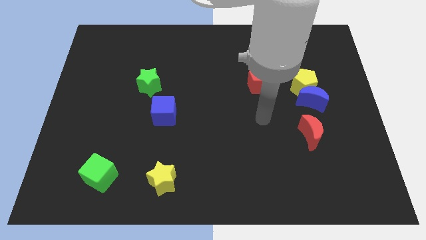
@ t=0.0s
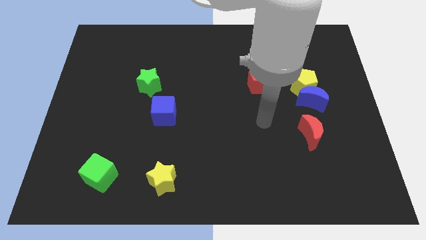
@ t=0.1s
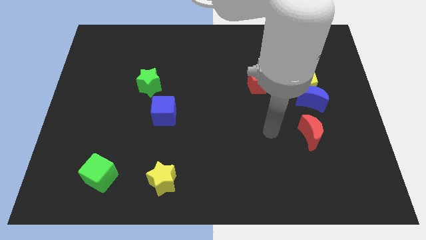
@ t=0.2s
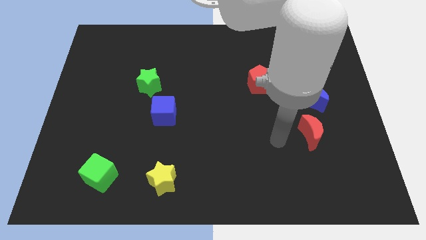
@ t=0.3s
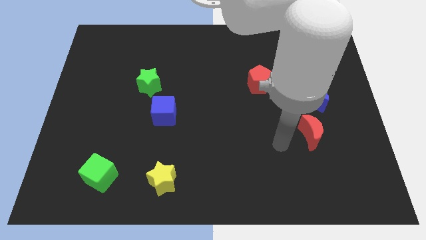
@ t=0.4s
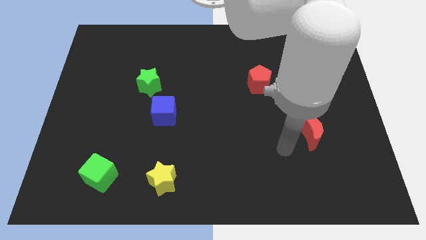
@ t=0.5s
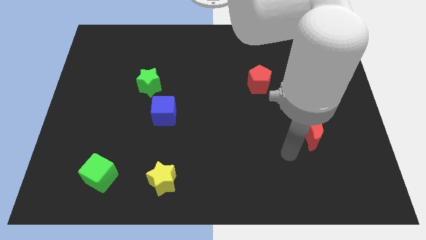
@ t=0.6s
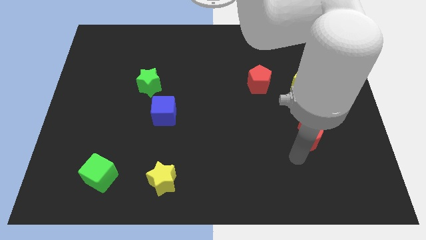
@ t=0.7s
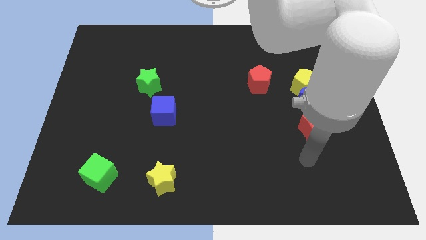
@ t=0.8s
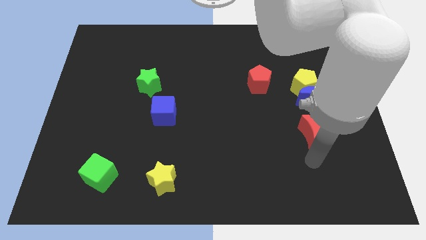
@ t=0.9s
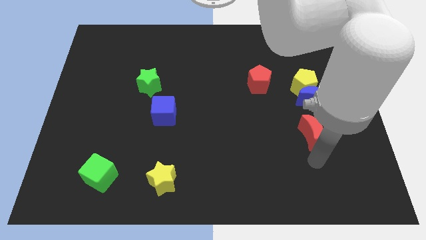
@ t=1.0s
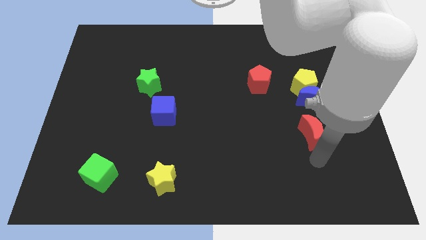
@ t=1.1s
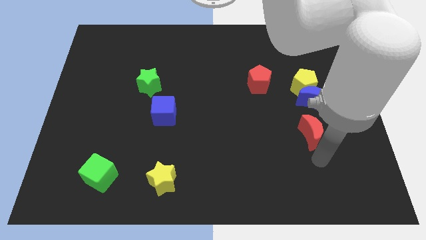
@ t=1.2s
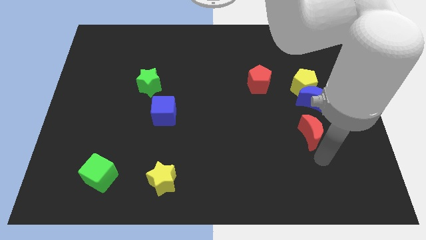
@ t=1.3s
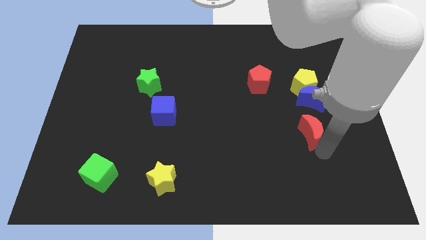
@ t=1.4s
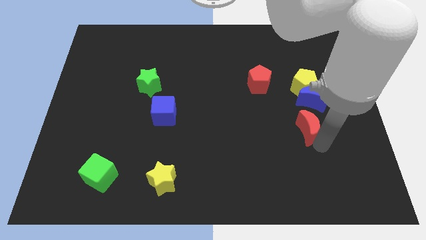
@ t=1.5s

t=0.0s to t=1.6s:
move your arm to the bottom of the red moon

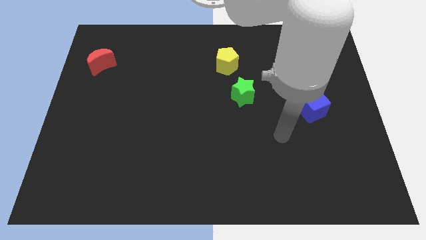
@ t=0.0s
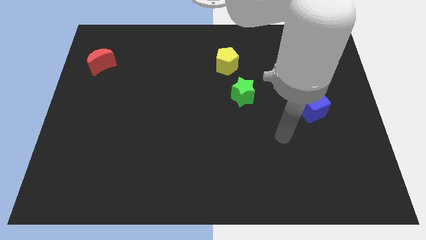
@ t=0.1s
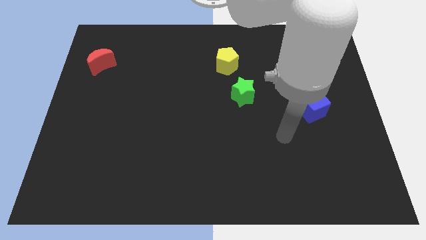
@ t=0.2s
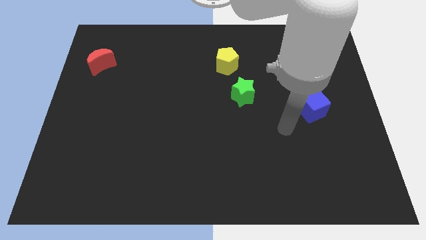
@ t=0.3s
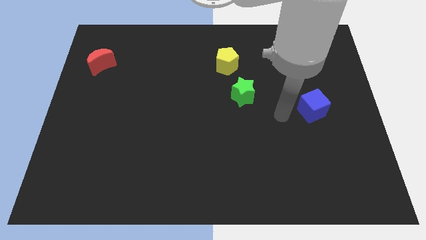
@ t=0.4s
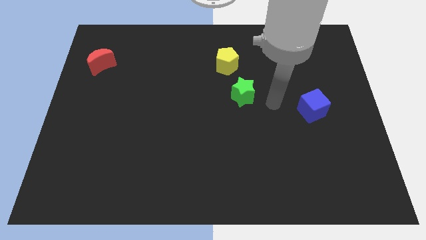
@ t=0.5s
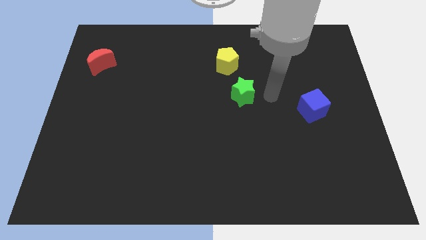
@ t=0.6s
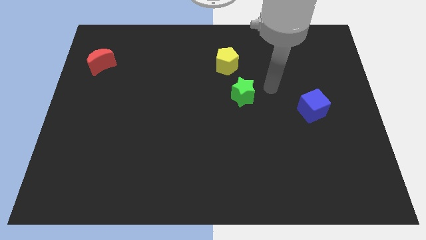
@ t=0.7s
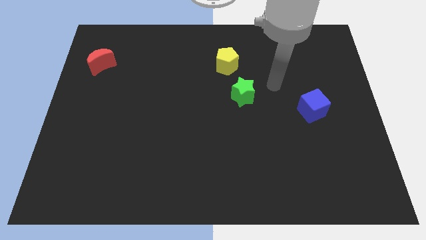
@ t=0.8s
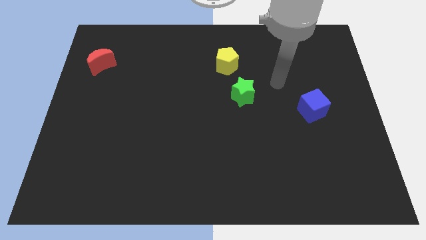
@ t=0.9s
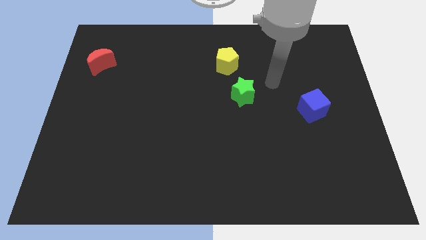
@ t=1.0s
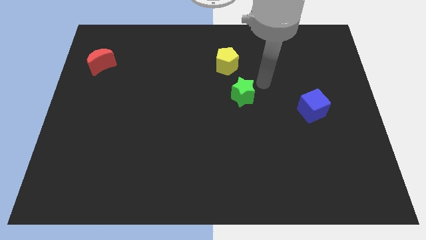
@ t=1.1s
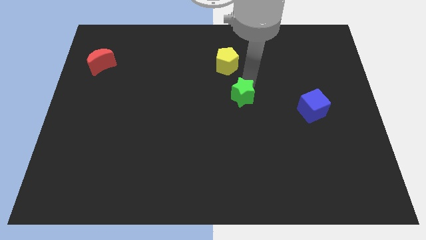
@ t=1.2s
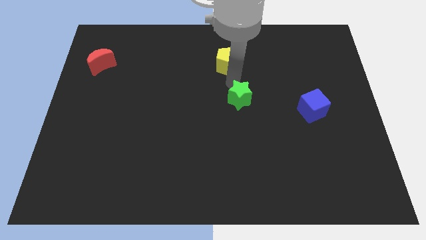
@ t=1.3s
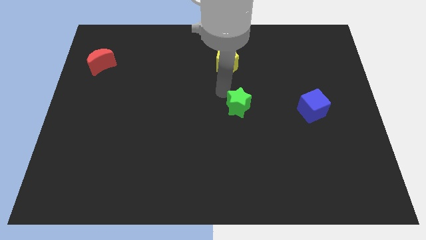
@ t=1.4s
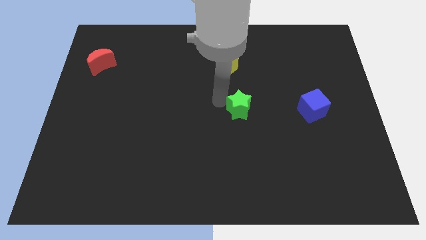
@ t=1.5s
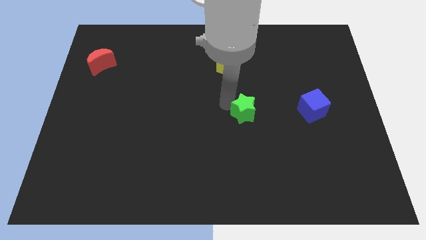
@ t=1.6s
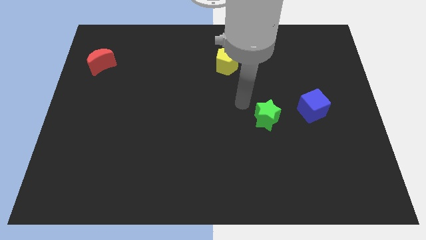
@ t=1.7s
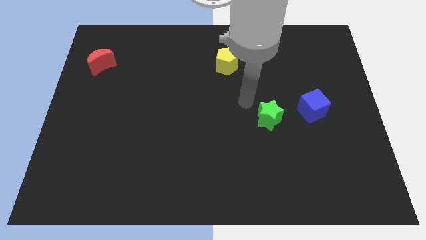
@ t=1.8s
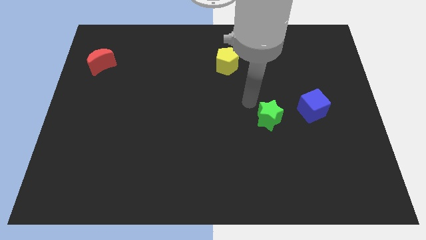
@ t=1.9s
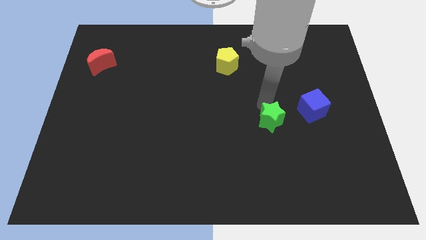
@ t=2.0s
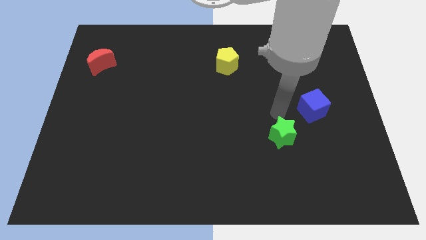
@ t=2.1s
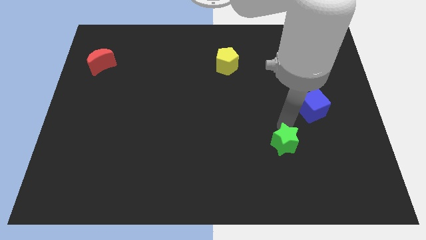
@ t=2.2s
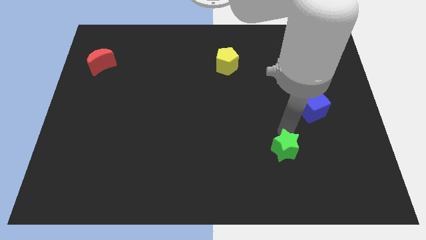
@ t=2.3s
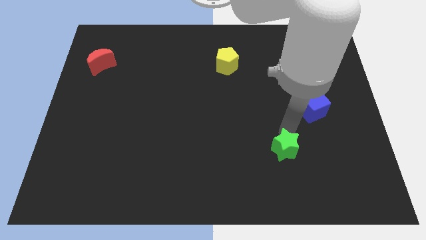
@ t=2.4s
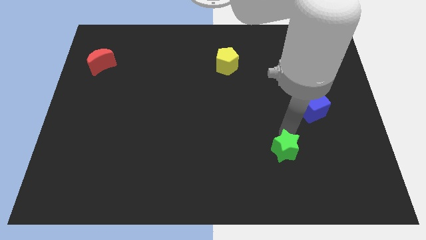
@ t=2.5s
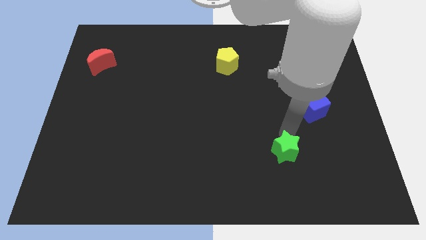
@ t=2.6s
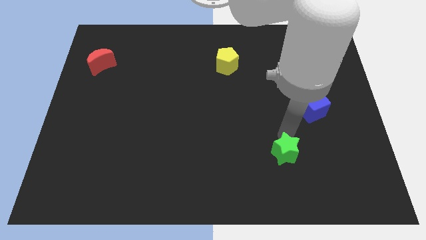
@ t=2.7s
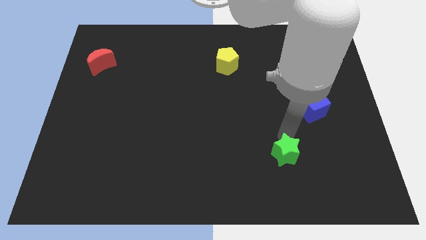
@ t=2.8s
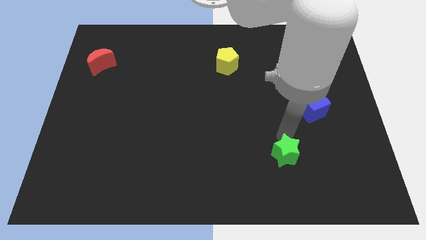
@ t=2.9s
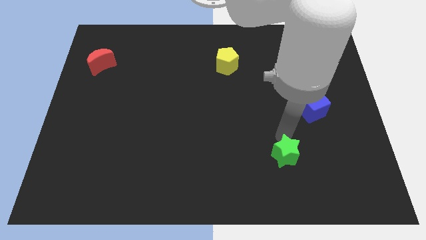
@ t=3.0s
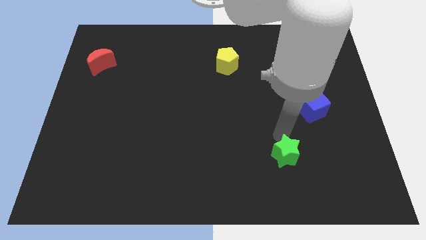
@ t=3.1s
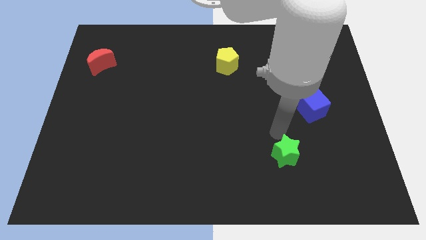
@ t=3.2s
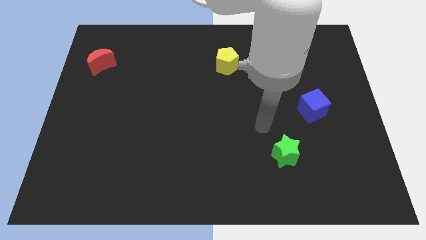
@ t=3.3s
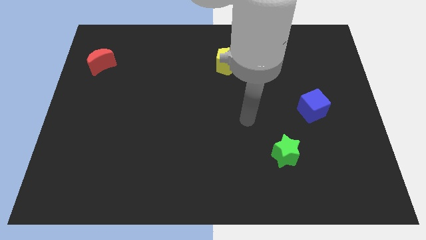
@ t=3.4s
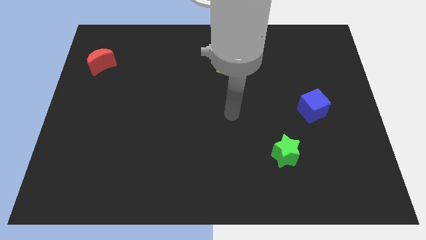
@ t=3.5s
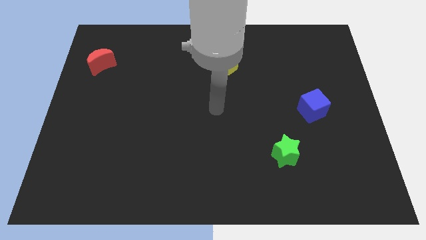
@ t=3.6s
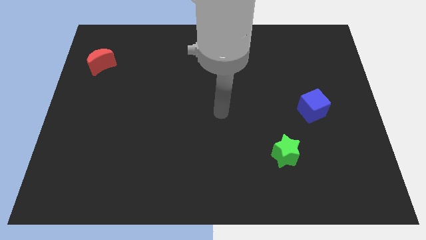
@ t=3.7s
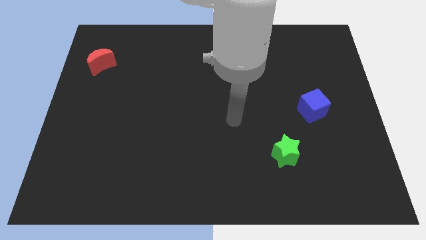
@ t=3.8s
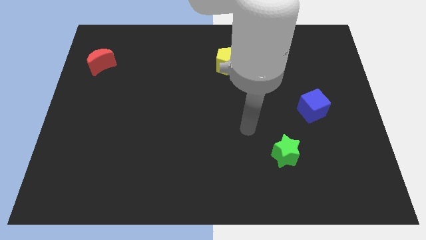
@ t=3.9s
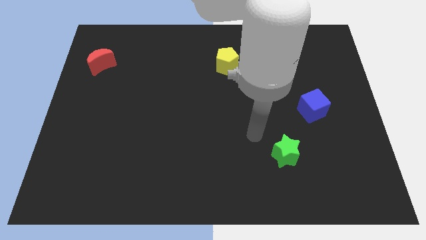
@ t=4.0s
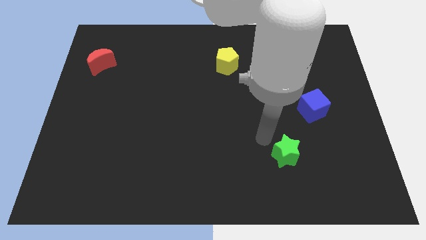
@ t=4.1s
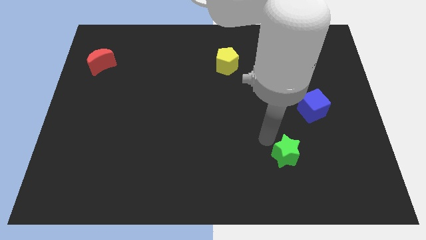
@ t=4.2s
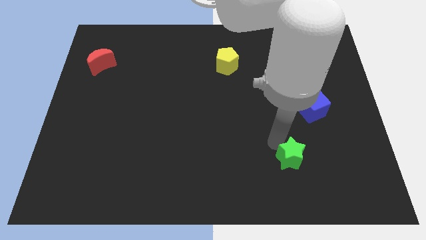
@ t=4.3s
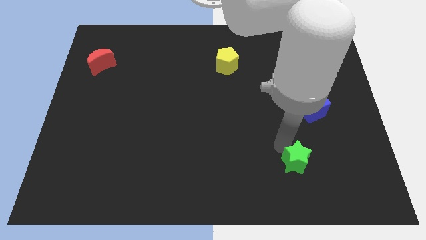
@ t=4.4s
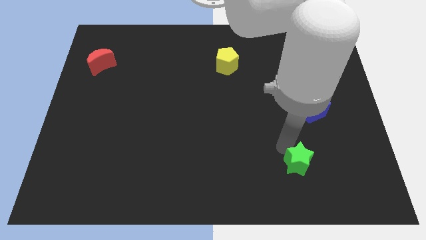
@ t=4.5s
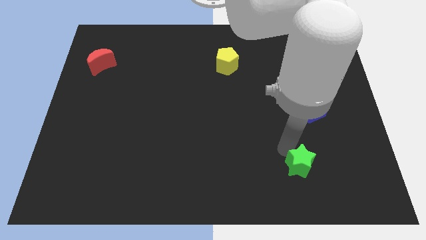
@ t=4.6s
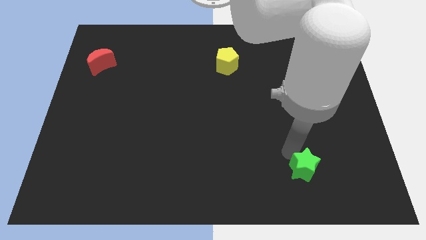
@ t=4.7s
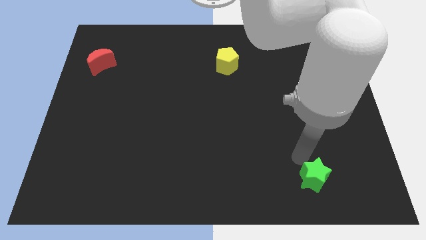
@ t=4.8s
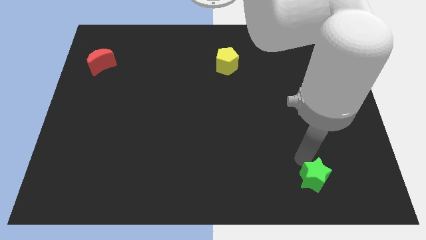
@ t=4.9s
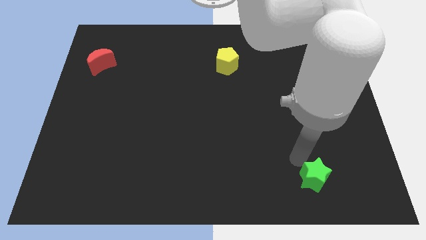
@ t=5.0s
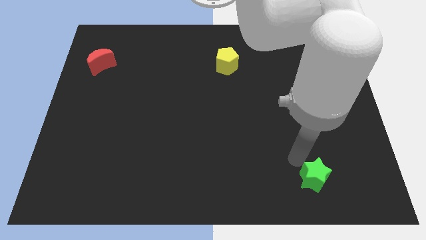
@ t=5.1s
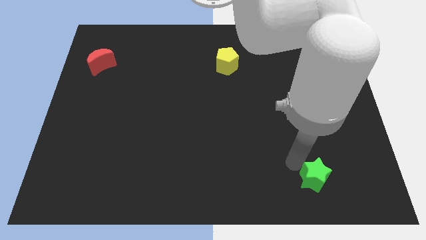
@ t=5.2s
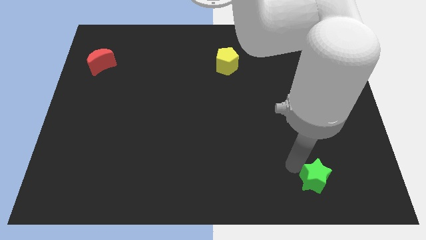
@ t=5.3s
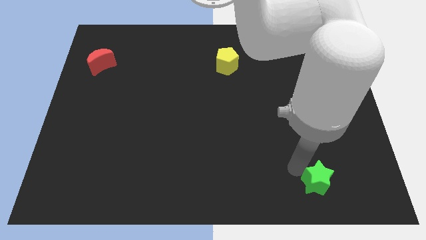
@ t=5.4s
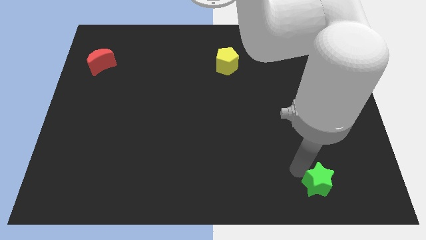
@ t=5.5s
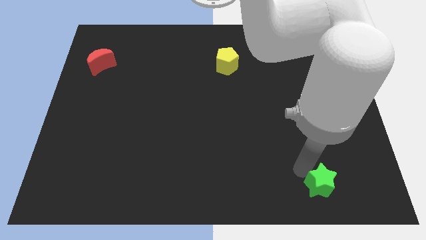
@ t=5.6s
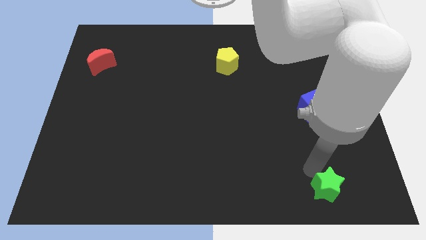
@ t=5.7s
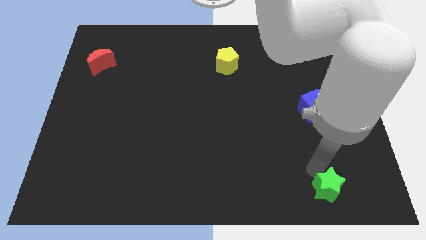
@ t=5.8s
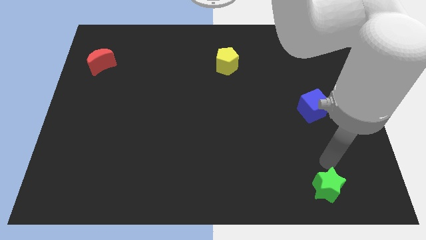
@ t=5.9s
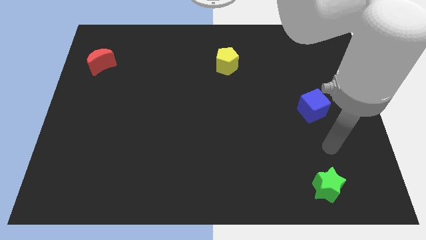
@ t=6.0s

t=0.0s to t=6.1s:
push the green star vertically below the bottom side of the blue cube

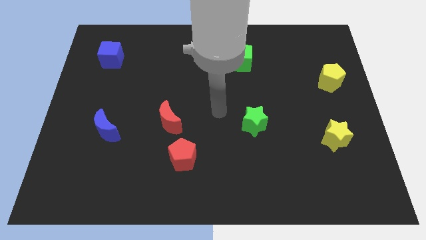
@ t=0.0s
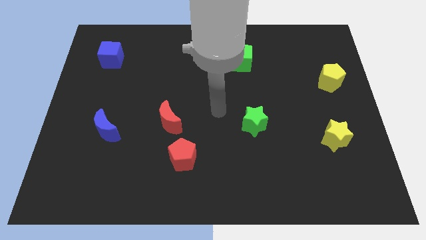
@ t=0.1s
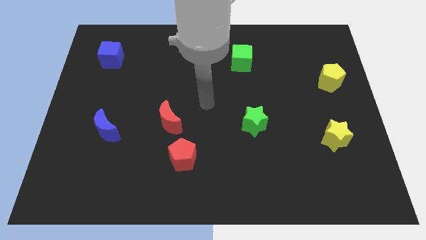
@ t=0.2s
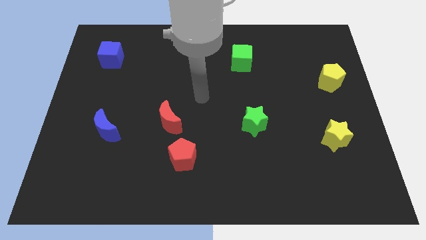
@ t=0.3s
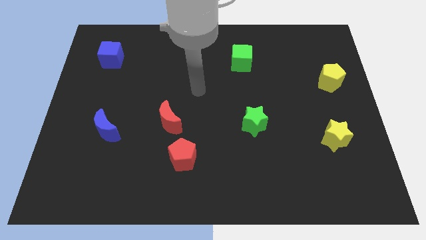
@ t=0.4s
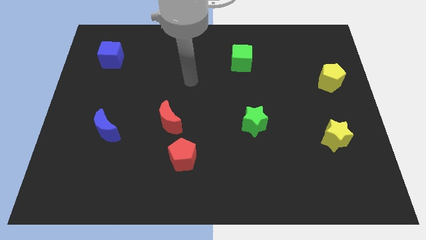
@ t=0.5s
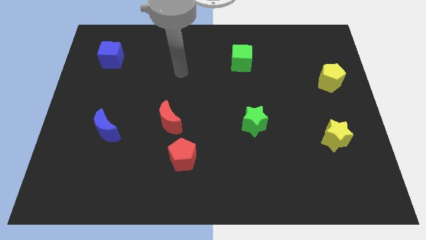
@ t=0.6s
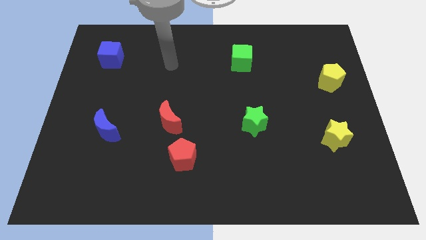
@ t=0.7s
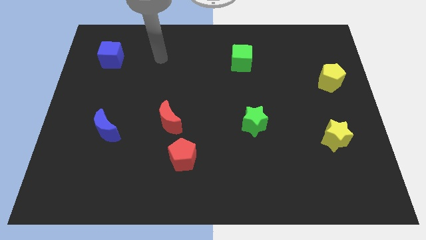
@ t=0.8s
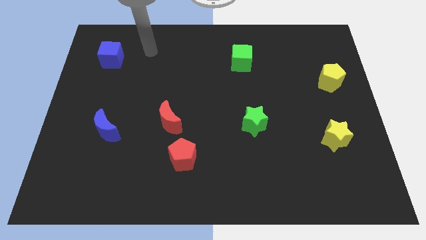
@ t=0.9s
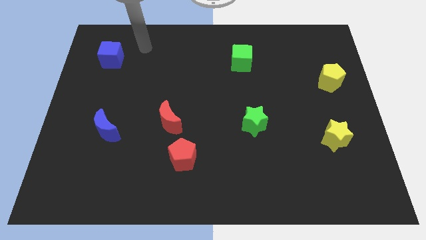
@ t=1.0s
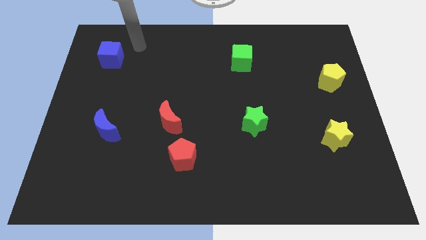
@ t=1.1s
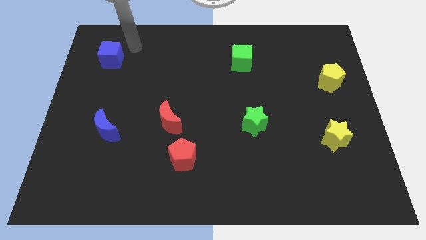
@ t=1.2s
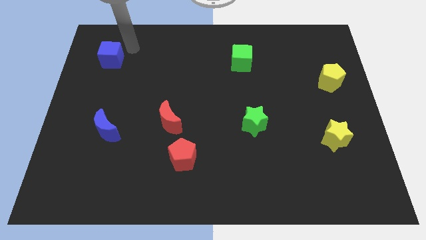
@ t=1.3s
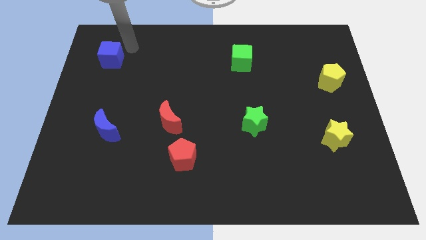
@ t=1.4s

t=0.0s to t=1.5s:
place your arm at the top right of the blue cube
